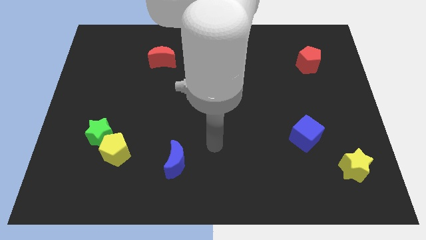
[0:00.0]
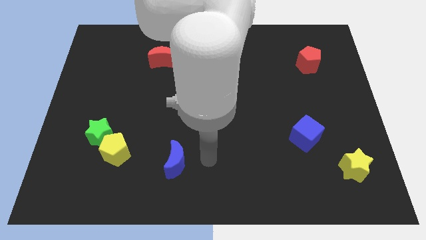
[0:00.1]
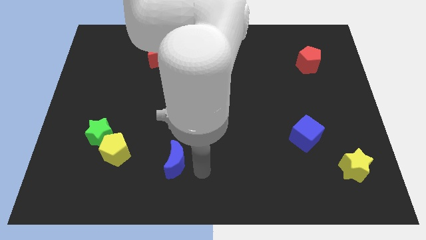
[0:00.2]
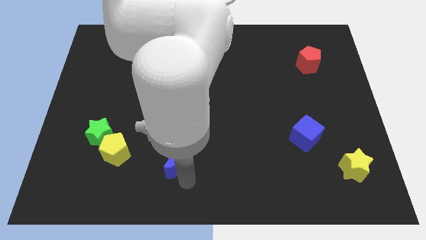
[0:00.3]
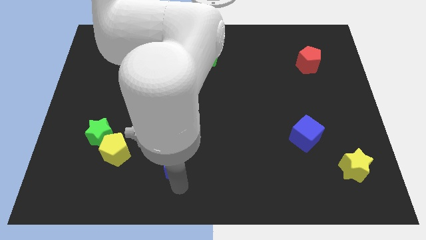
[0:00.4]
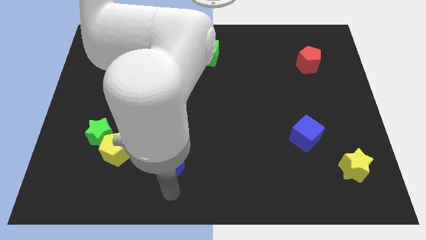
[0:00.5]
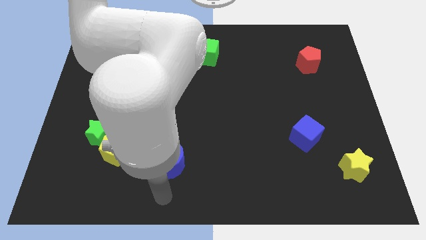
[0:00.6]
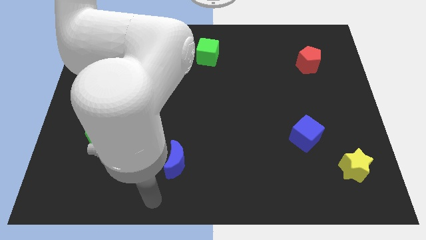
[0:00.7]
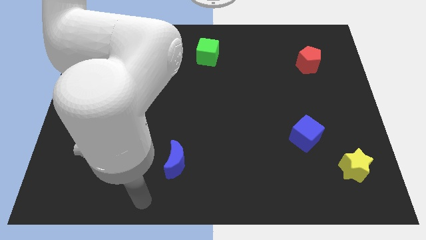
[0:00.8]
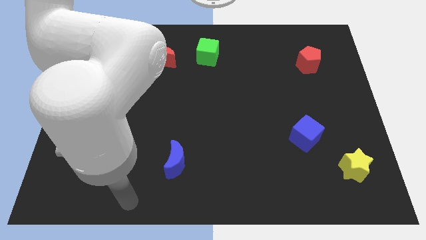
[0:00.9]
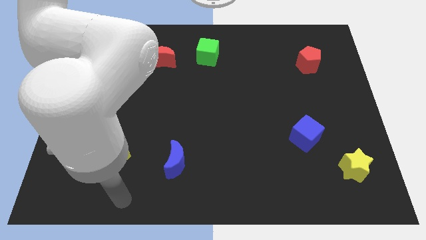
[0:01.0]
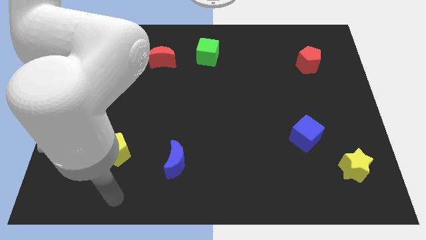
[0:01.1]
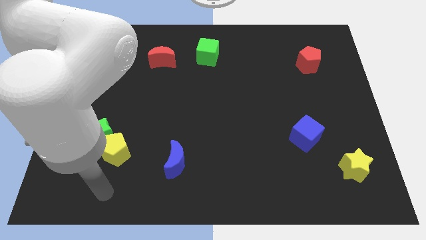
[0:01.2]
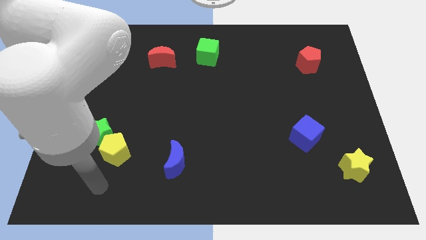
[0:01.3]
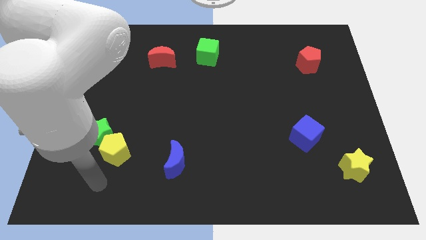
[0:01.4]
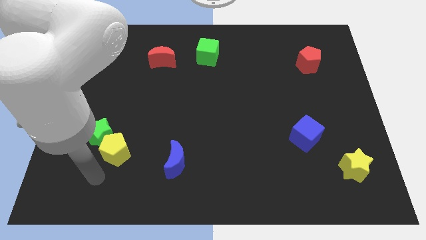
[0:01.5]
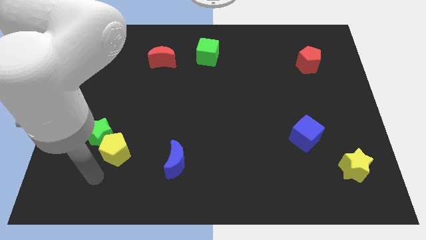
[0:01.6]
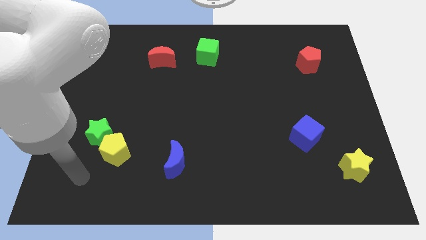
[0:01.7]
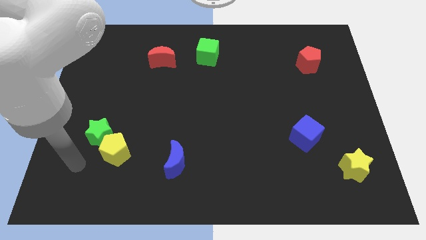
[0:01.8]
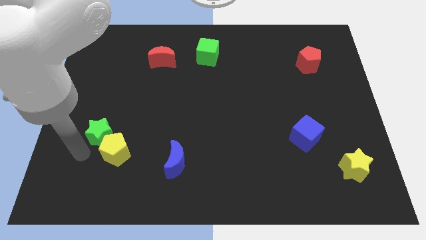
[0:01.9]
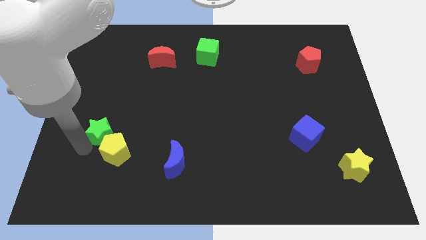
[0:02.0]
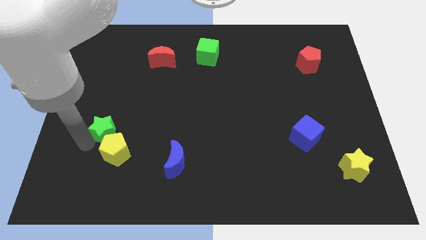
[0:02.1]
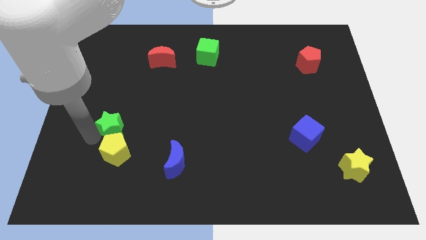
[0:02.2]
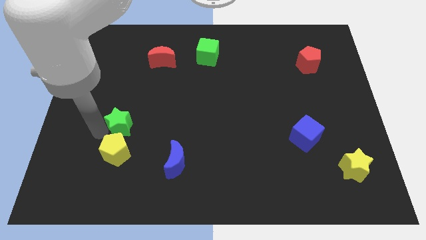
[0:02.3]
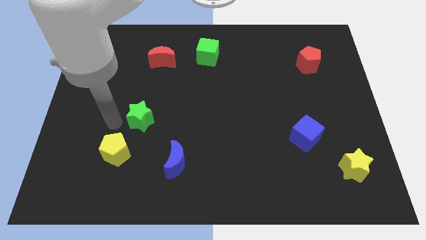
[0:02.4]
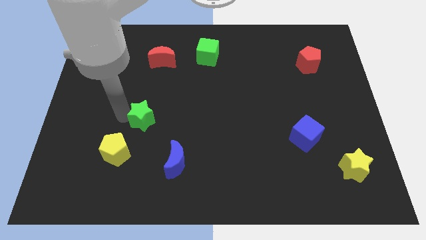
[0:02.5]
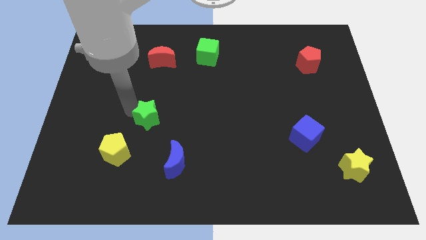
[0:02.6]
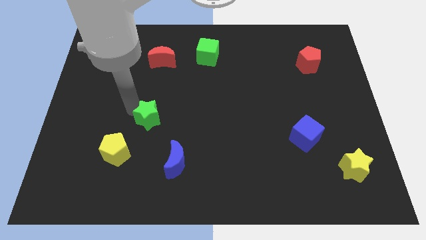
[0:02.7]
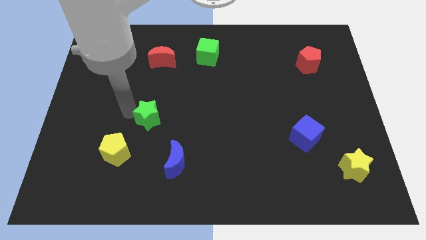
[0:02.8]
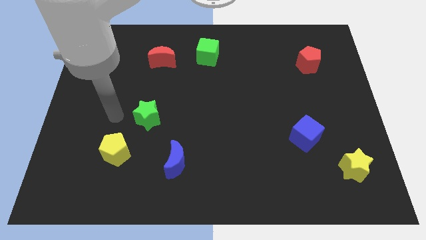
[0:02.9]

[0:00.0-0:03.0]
push the green star away from the yellow pentagon

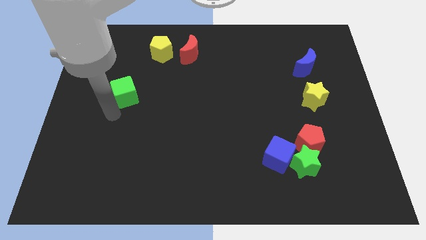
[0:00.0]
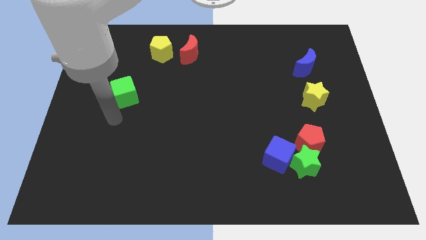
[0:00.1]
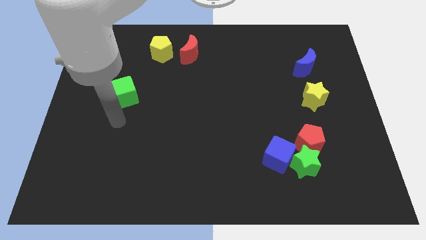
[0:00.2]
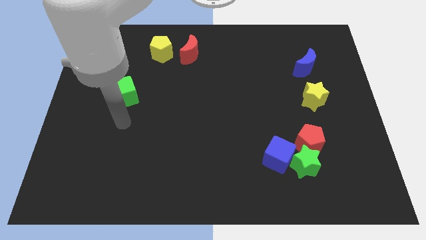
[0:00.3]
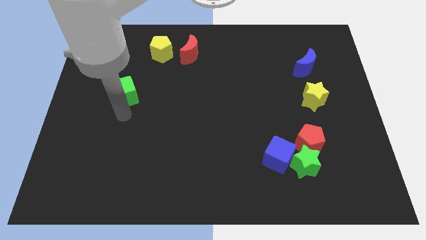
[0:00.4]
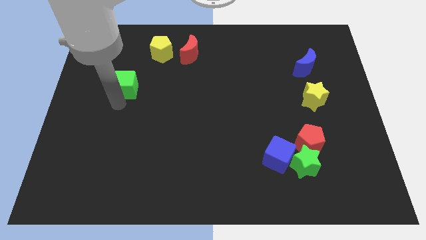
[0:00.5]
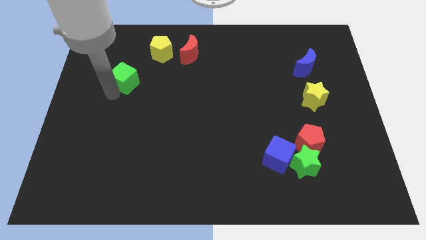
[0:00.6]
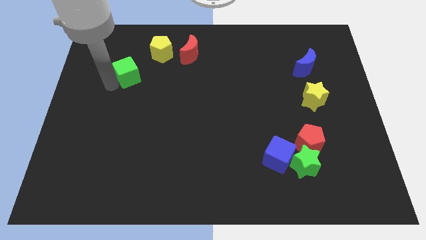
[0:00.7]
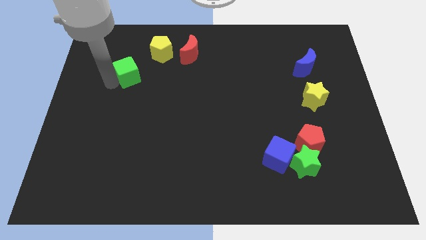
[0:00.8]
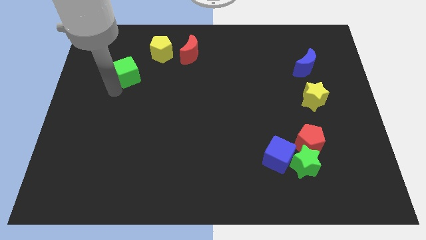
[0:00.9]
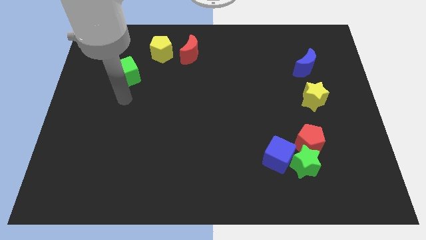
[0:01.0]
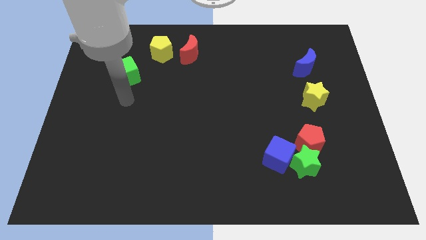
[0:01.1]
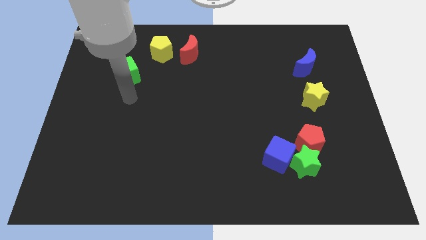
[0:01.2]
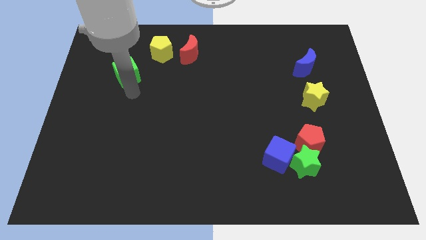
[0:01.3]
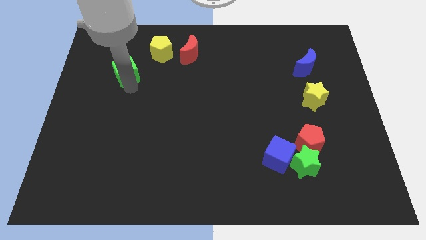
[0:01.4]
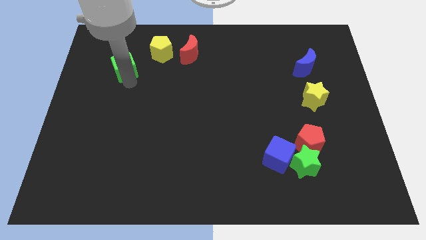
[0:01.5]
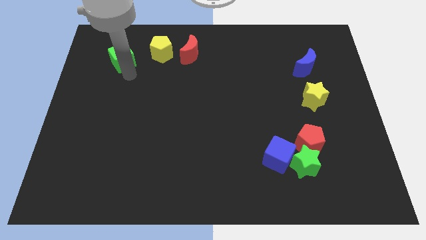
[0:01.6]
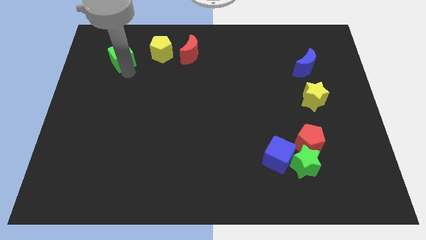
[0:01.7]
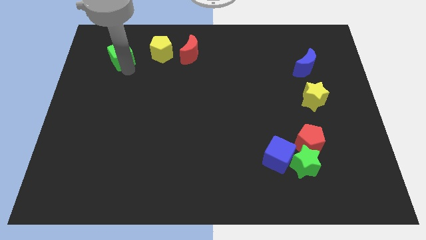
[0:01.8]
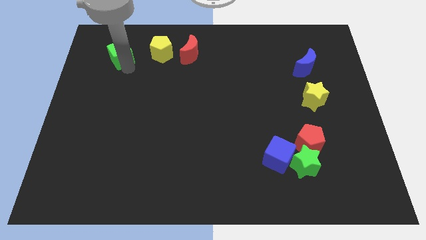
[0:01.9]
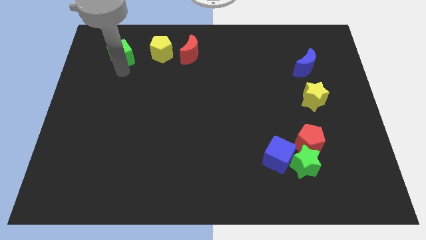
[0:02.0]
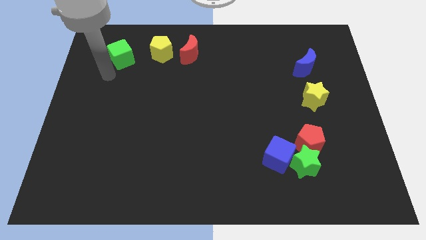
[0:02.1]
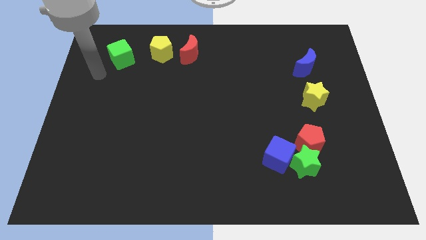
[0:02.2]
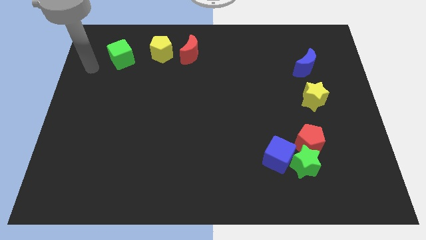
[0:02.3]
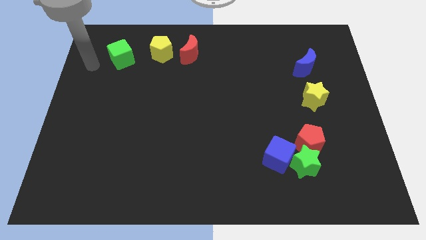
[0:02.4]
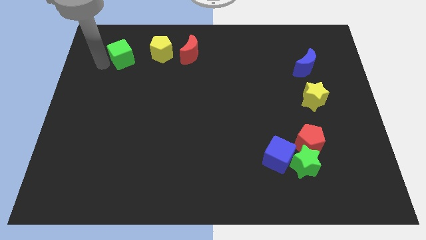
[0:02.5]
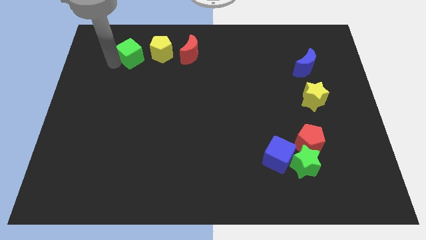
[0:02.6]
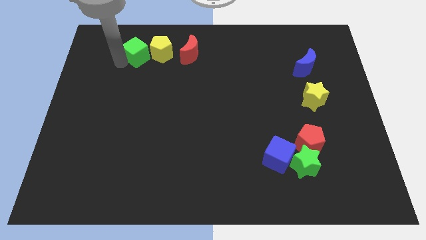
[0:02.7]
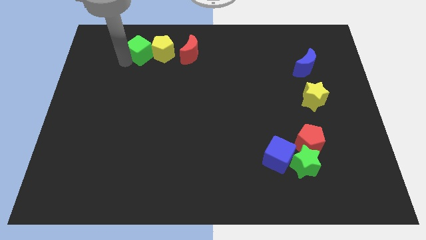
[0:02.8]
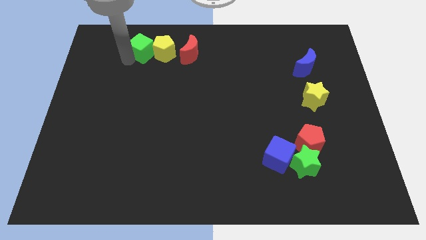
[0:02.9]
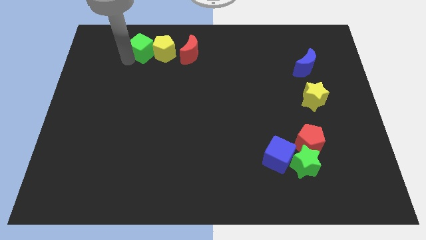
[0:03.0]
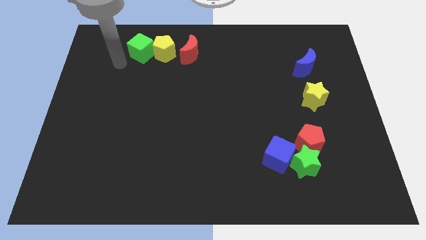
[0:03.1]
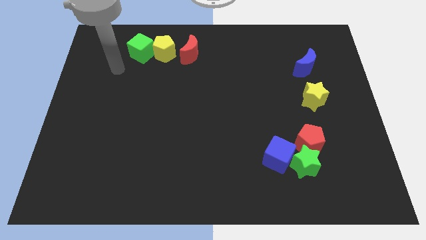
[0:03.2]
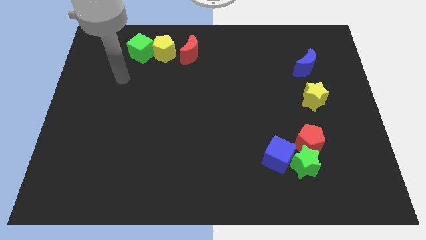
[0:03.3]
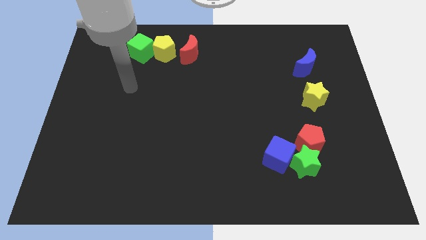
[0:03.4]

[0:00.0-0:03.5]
push the green cube to the left of the yellow pentagon

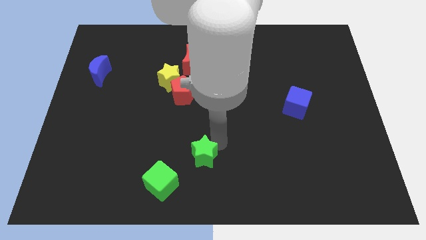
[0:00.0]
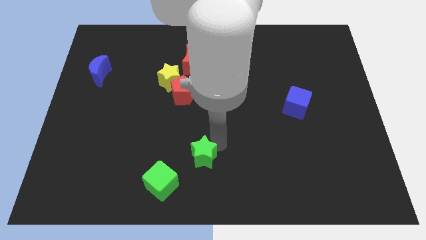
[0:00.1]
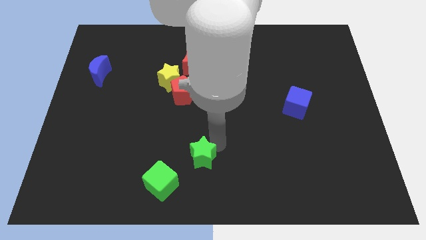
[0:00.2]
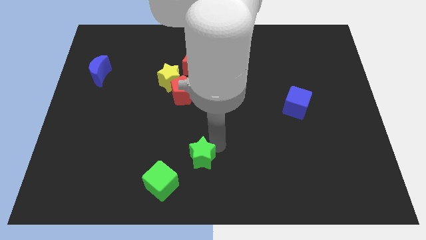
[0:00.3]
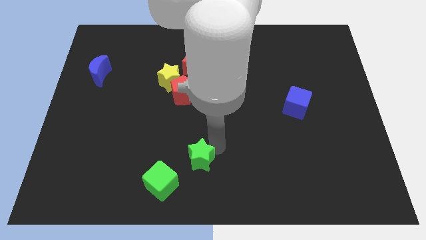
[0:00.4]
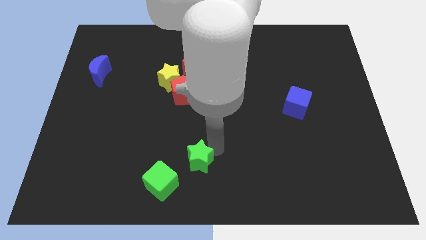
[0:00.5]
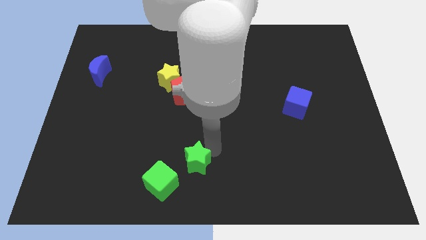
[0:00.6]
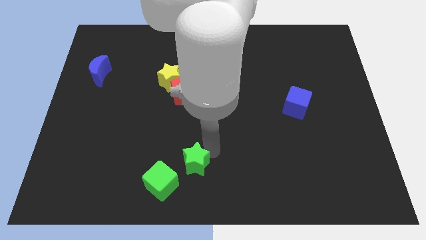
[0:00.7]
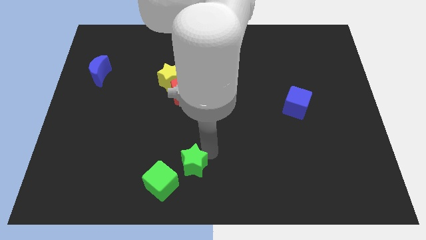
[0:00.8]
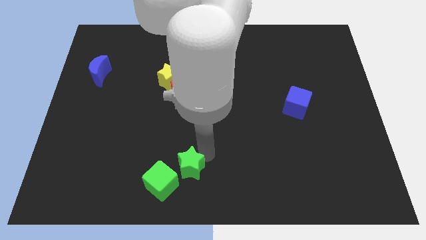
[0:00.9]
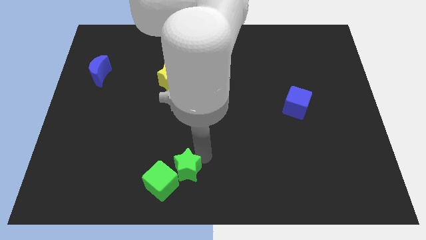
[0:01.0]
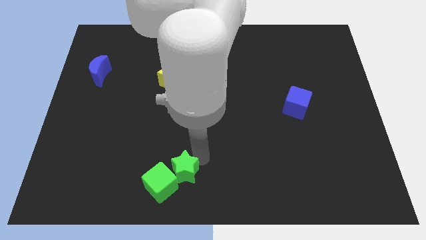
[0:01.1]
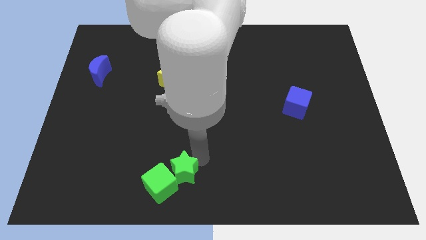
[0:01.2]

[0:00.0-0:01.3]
push the green star into the green cube

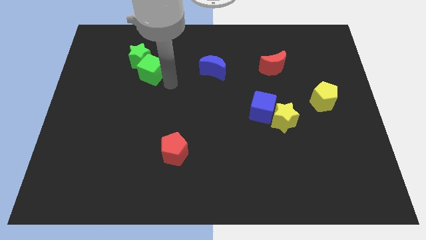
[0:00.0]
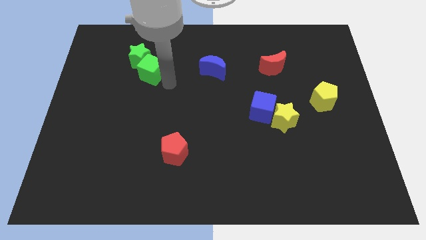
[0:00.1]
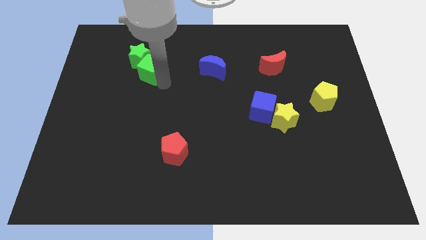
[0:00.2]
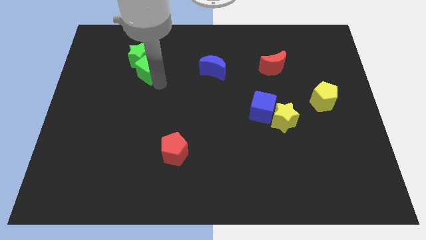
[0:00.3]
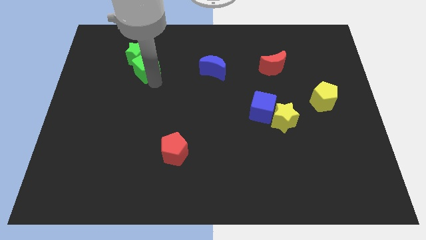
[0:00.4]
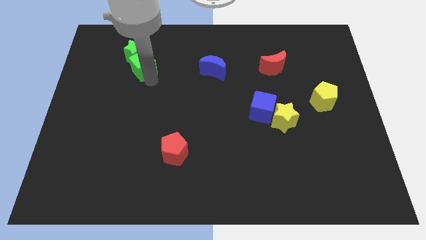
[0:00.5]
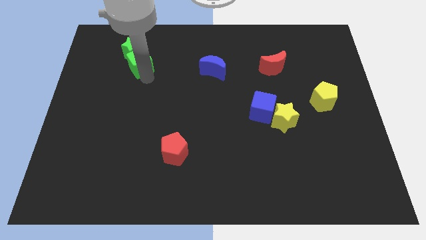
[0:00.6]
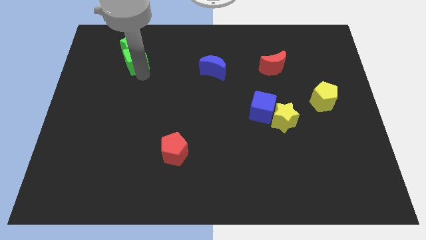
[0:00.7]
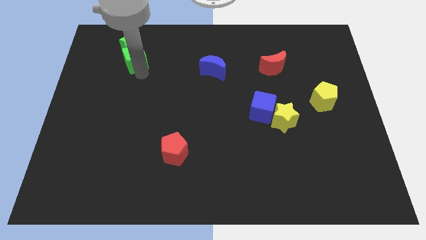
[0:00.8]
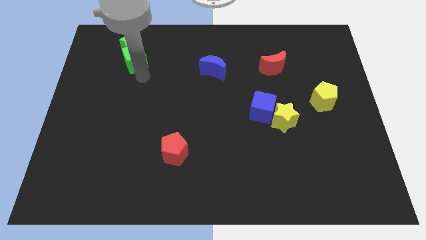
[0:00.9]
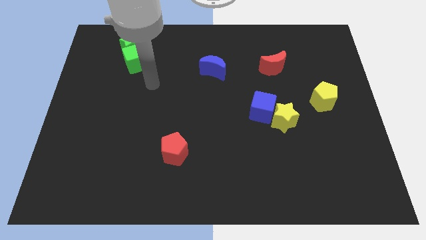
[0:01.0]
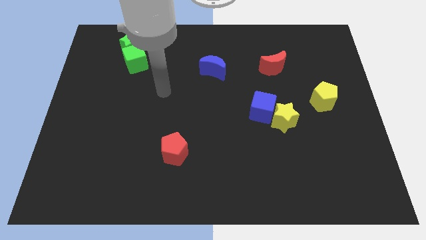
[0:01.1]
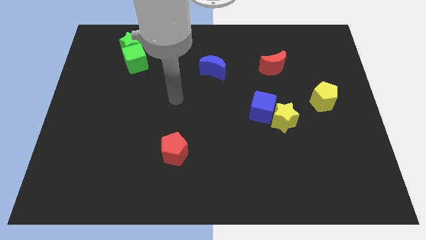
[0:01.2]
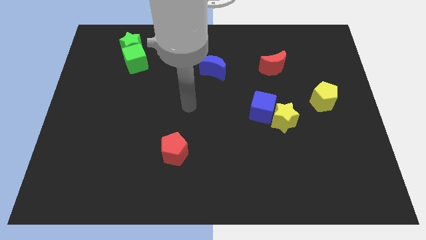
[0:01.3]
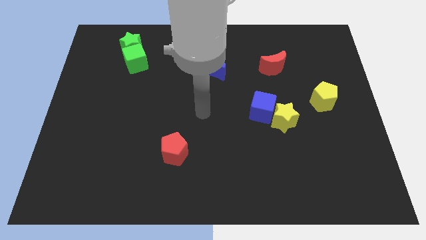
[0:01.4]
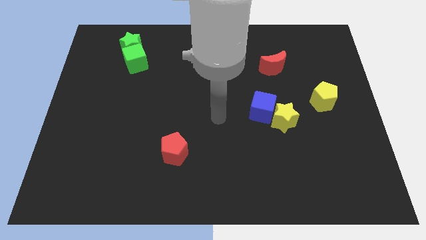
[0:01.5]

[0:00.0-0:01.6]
push the group of green blocks to the left
